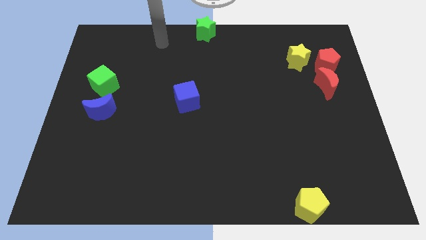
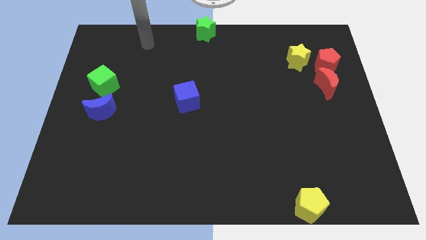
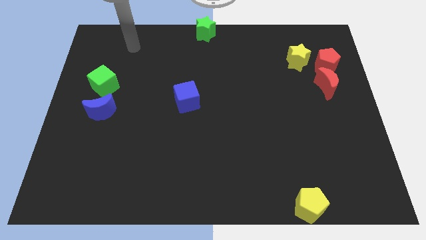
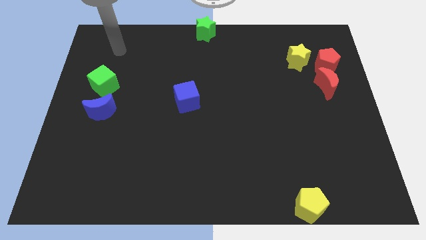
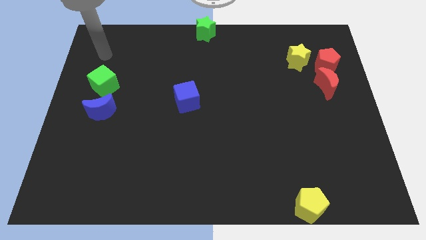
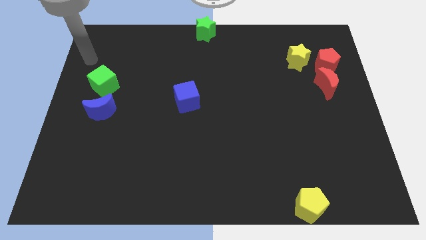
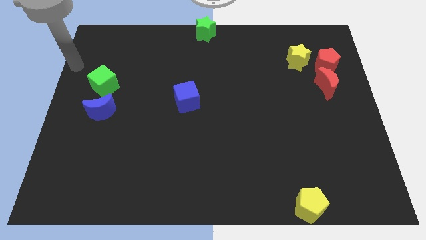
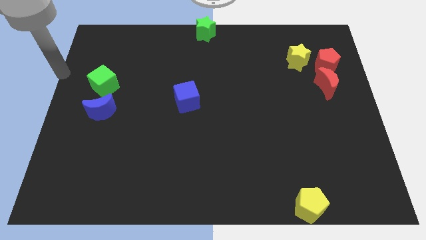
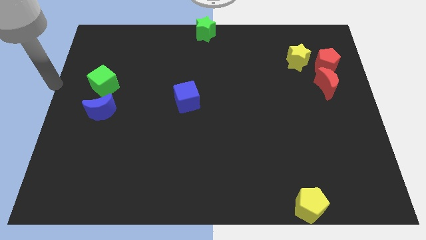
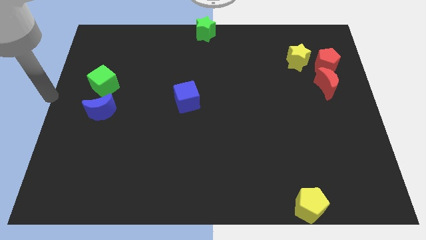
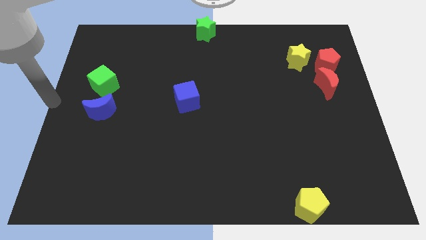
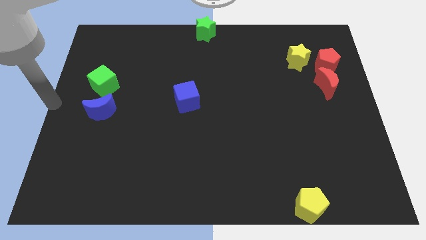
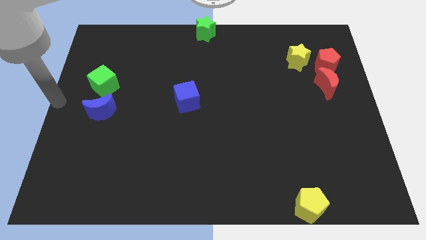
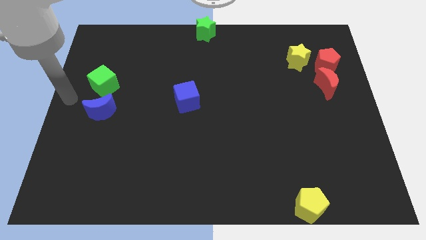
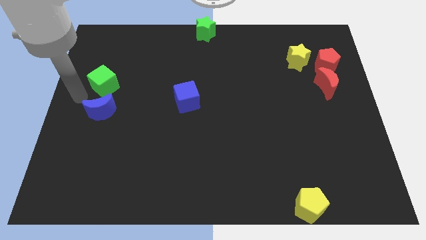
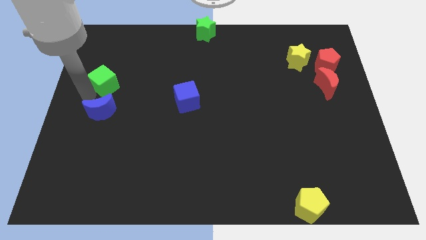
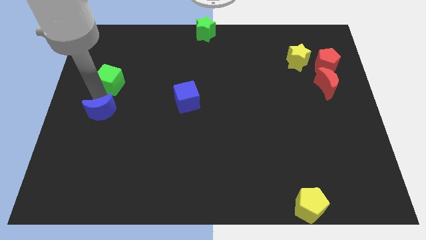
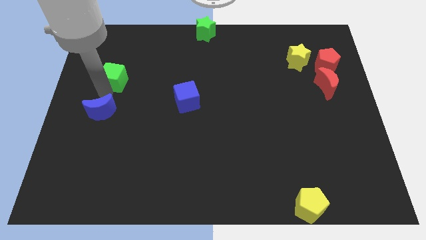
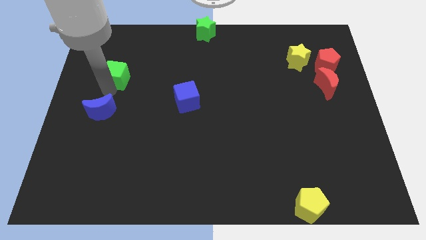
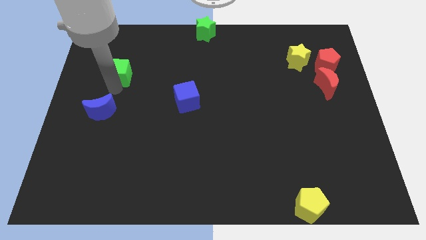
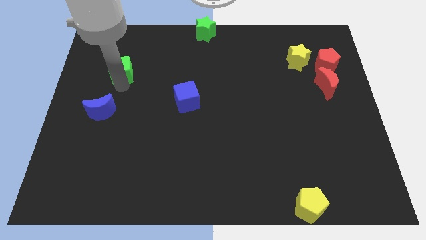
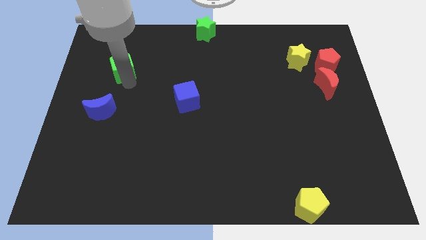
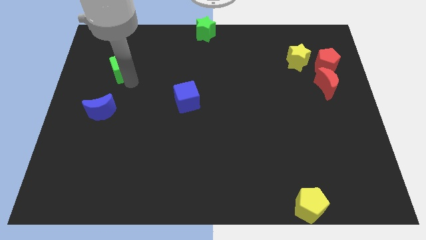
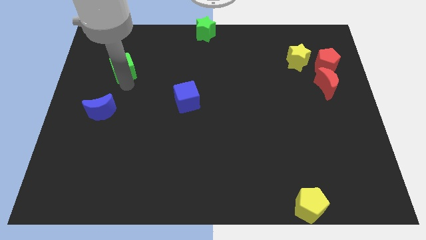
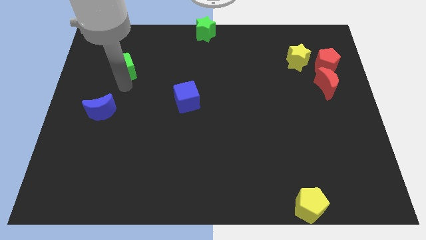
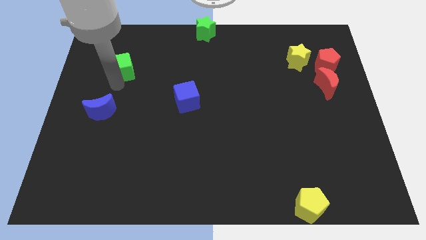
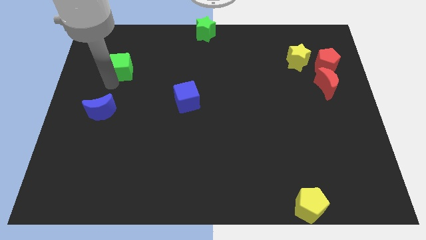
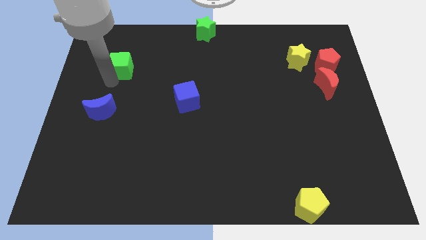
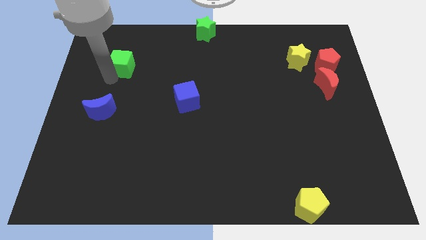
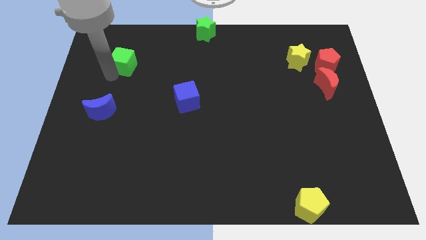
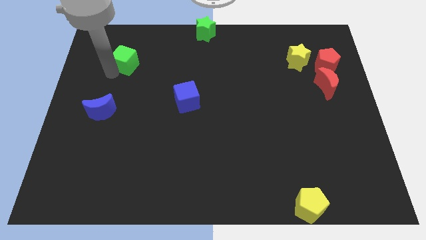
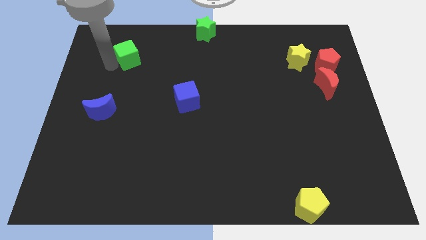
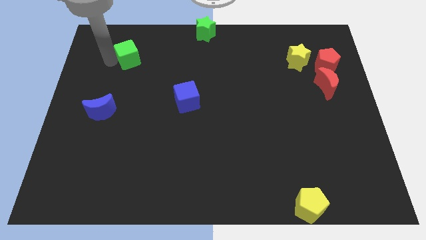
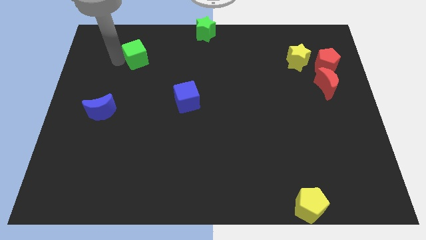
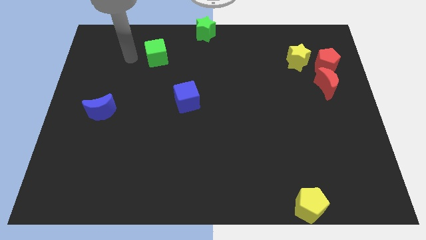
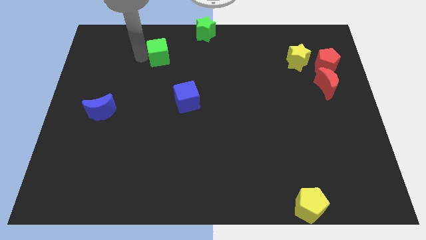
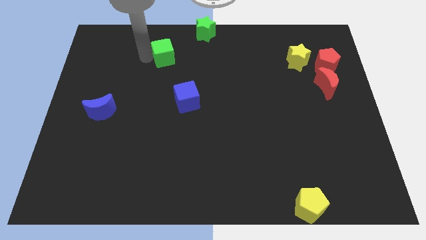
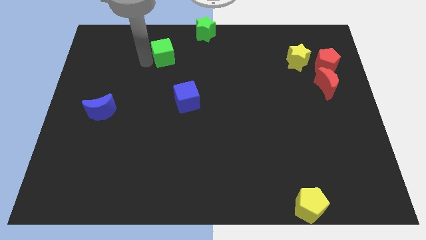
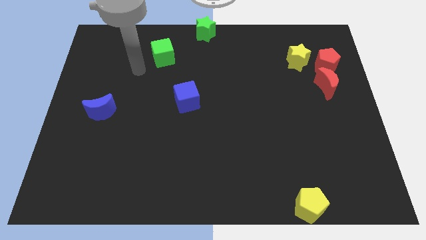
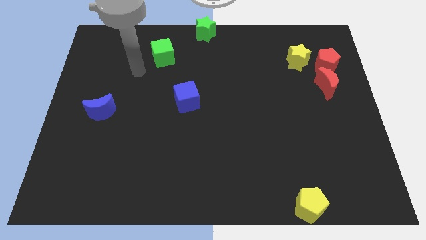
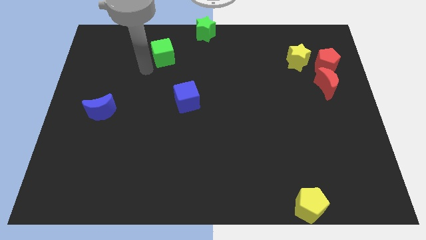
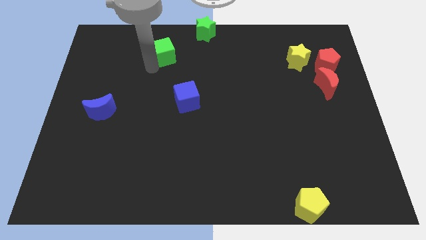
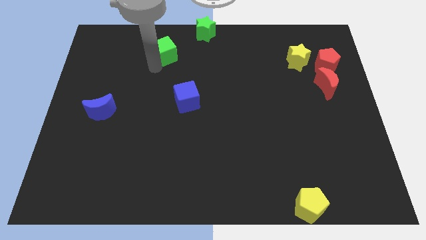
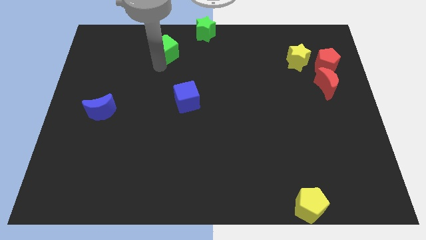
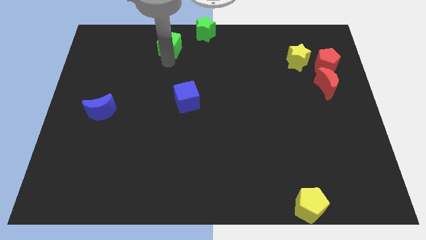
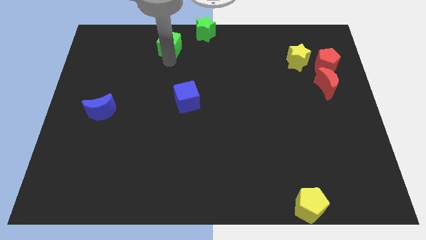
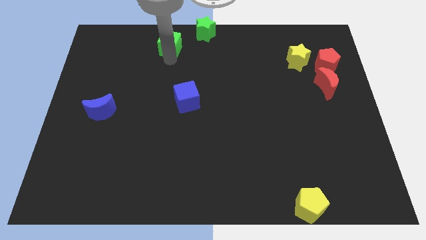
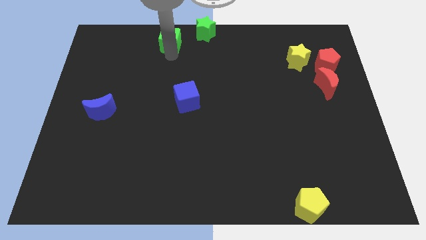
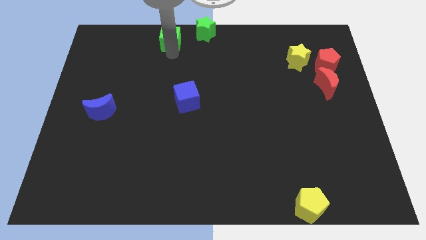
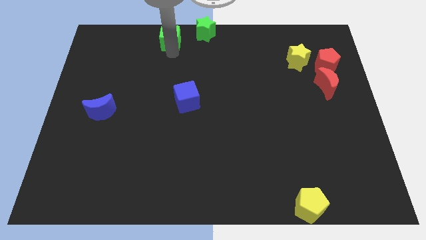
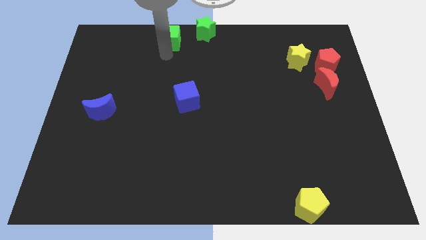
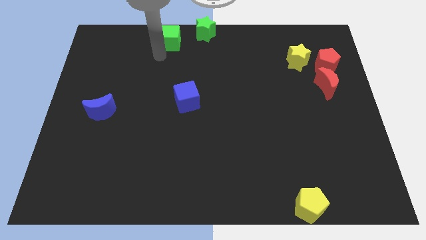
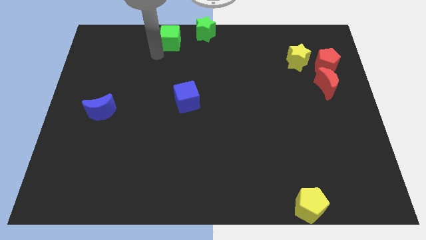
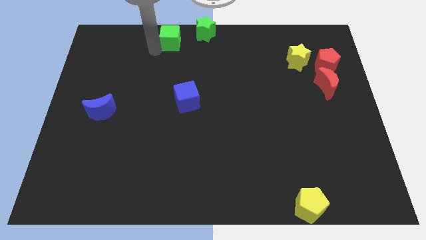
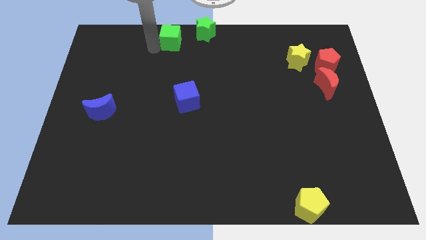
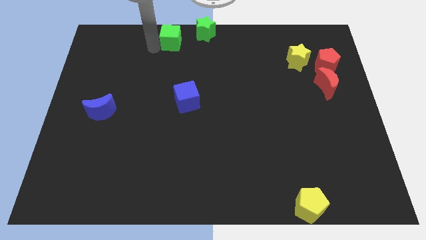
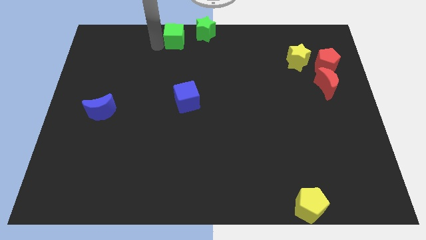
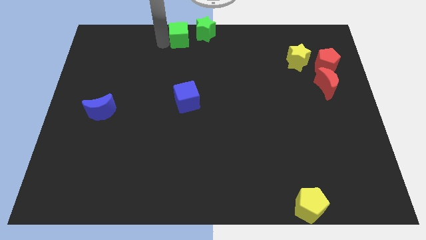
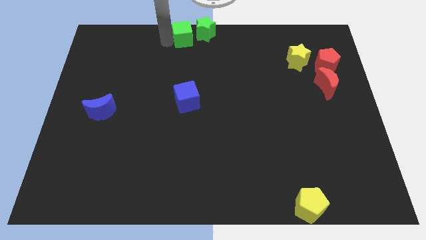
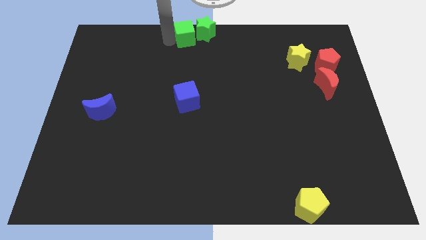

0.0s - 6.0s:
put green cube to the left of the green star

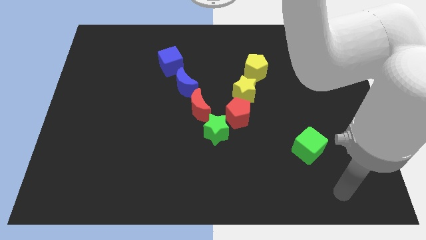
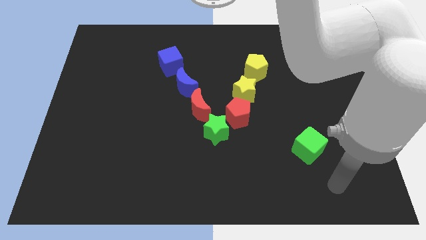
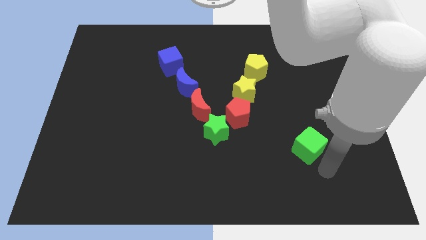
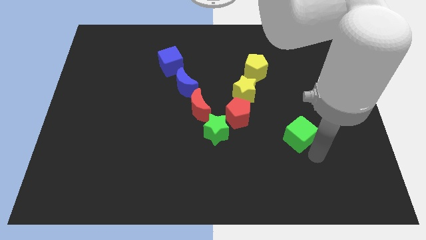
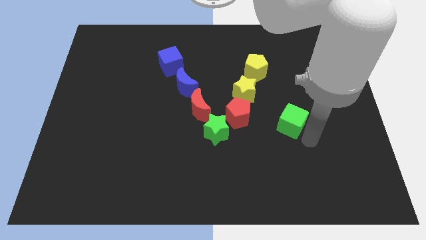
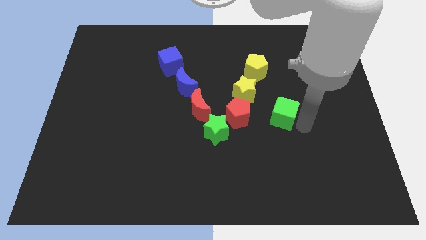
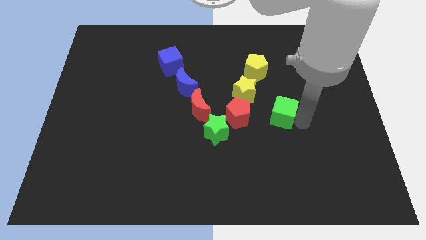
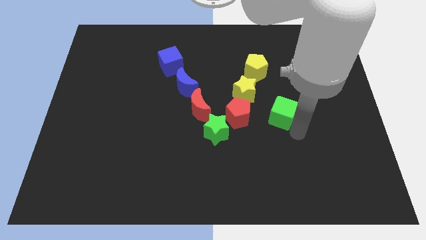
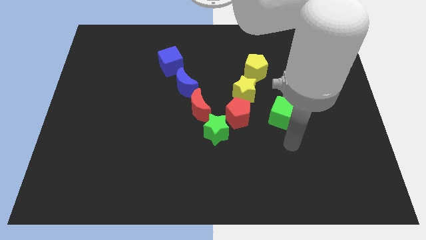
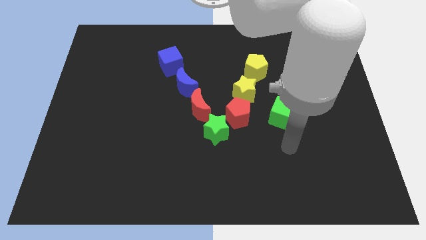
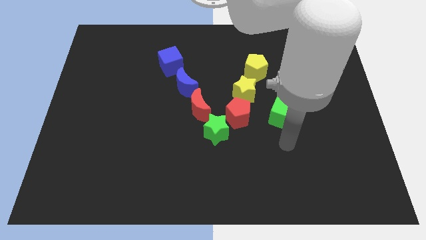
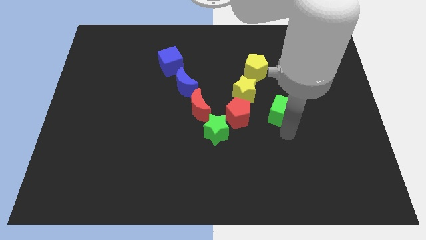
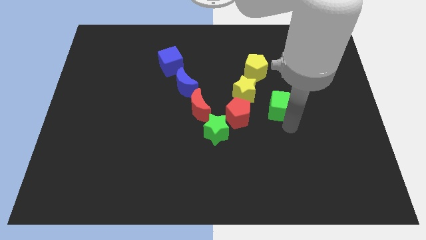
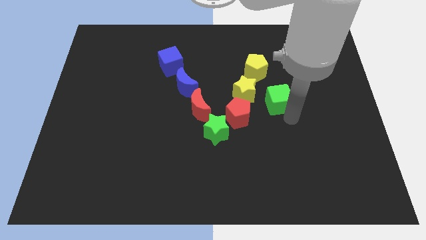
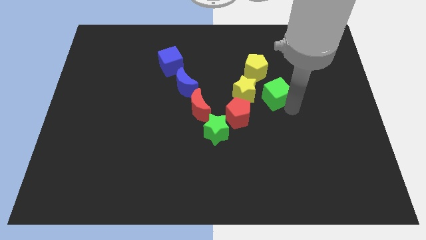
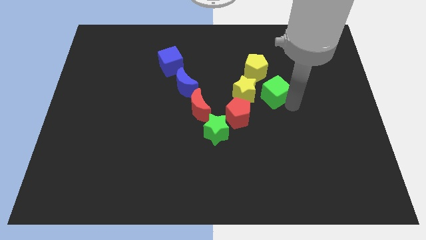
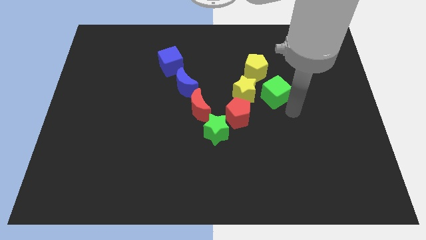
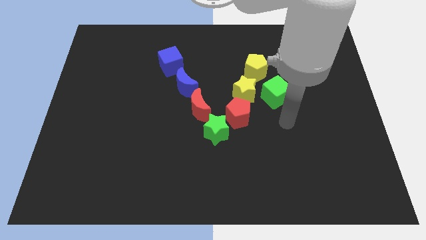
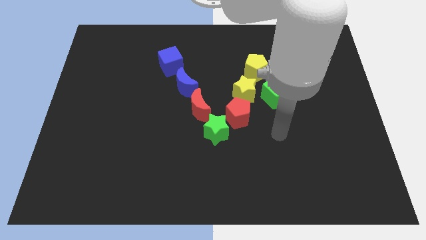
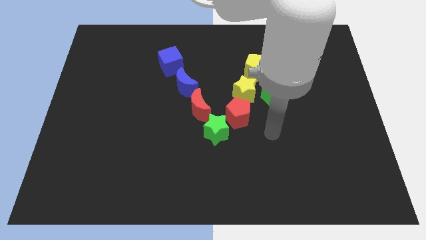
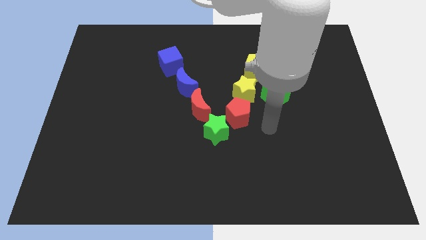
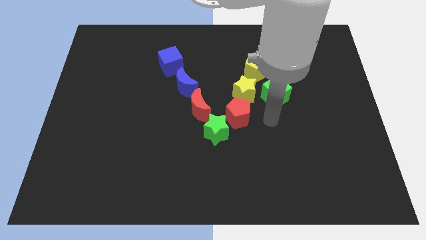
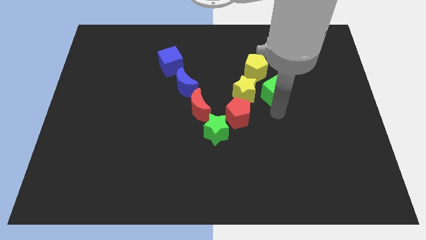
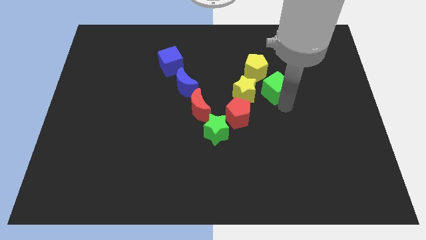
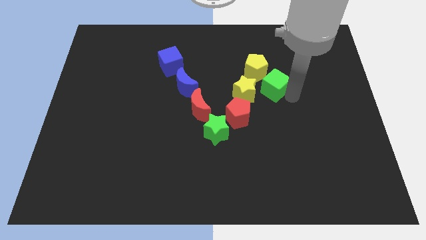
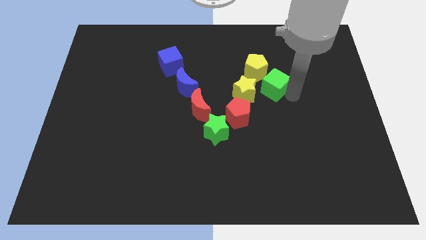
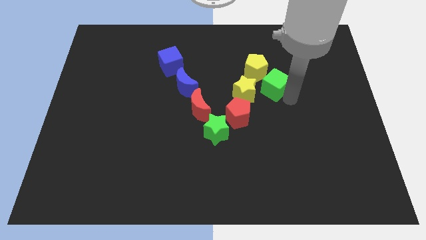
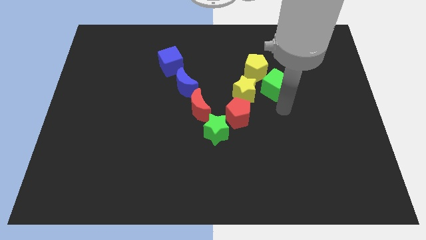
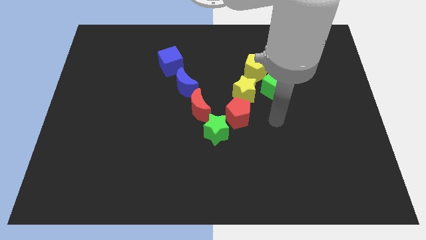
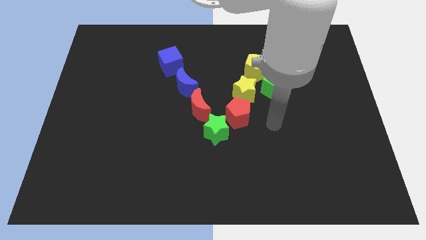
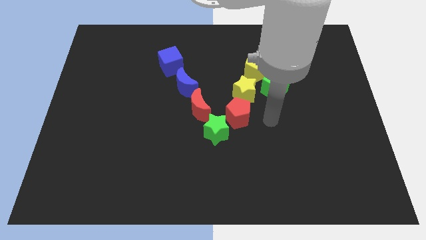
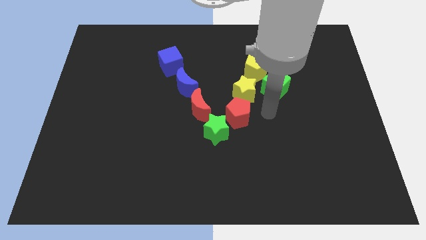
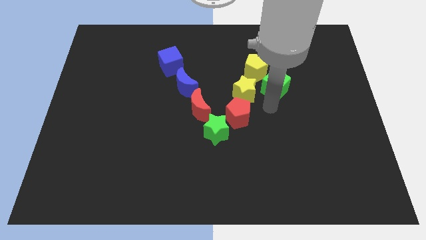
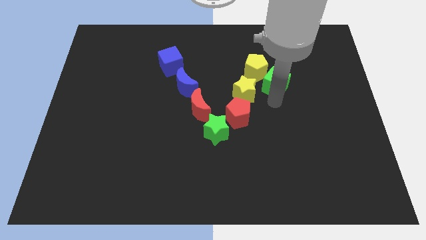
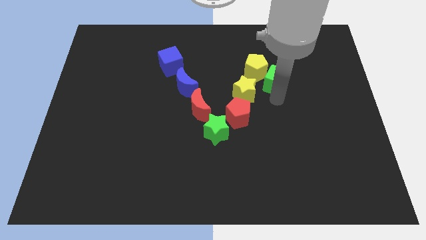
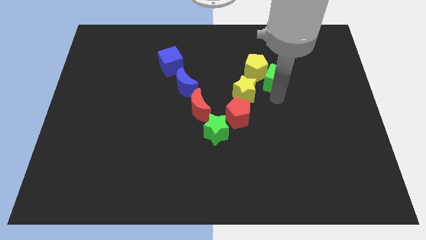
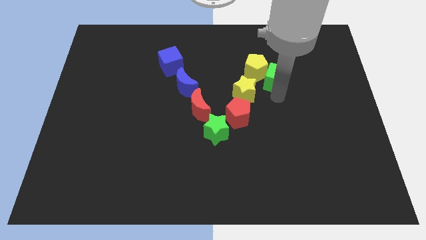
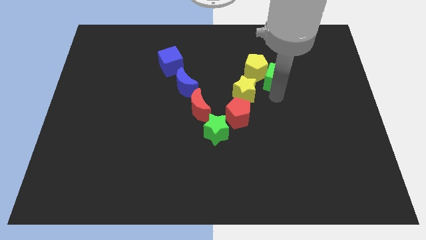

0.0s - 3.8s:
place the green cube to the bottom right side of the yellow pentagon
